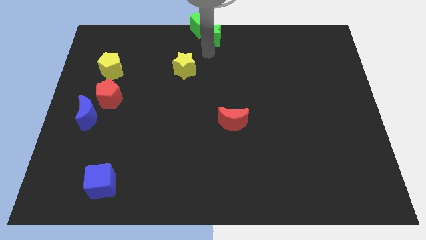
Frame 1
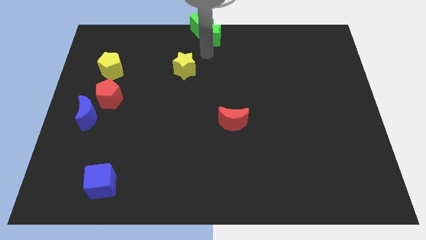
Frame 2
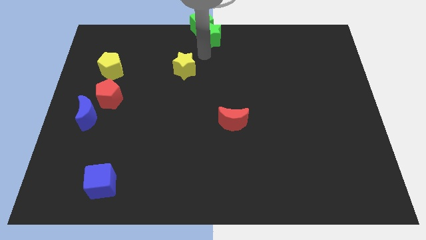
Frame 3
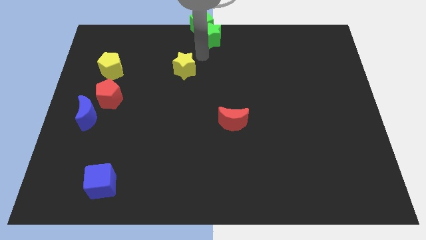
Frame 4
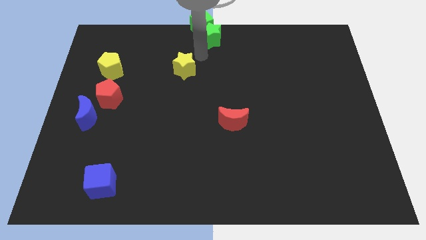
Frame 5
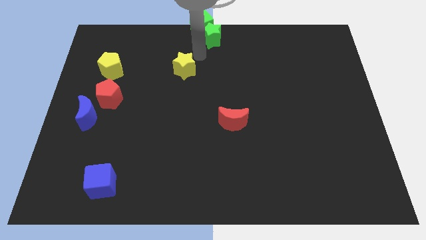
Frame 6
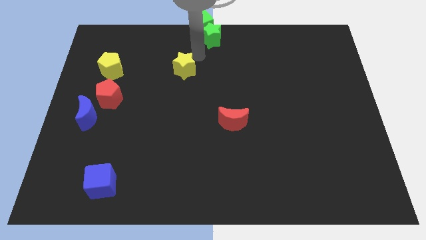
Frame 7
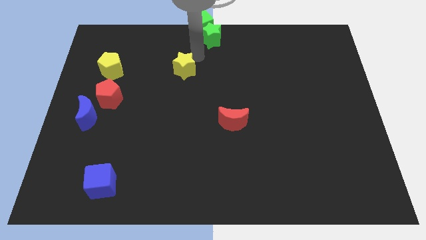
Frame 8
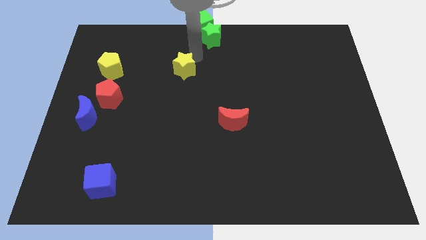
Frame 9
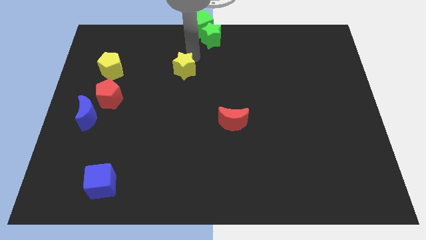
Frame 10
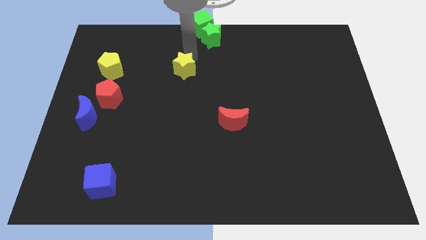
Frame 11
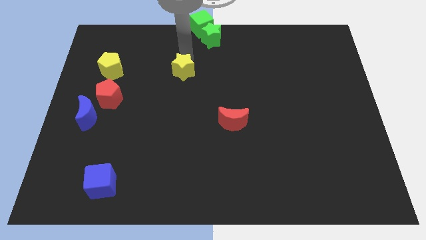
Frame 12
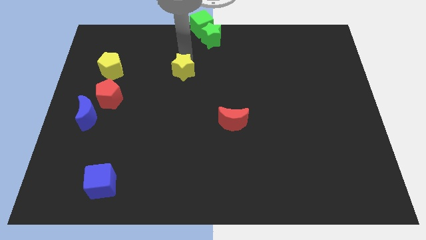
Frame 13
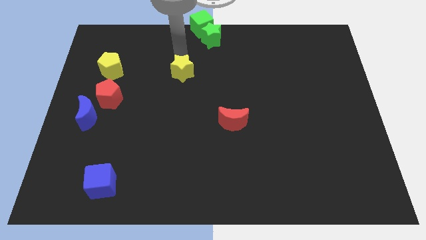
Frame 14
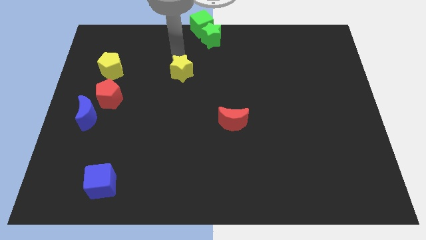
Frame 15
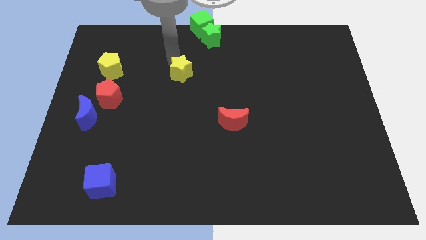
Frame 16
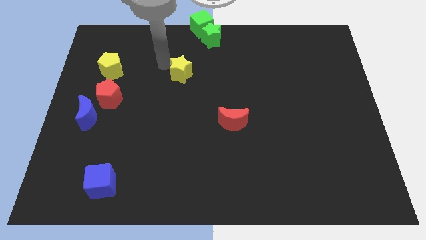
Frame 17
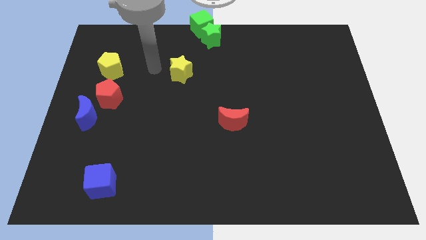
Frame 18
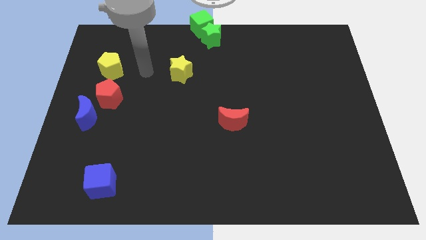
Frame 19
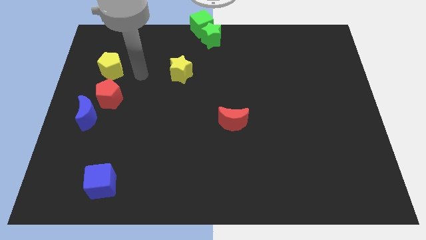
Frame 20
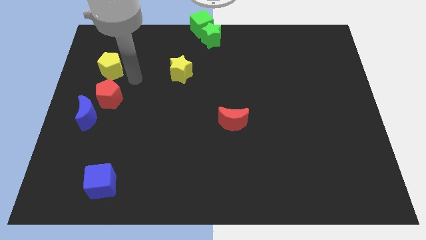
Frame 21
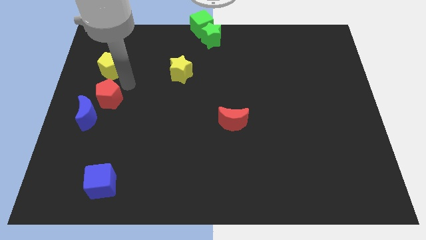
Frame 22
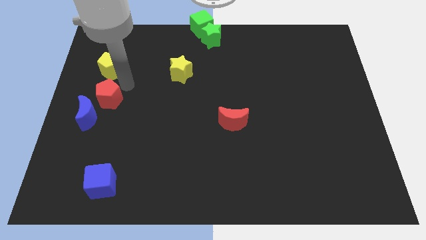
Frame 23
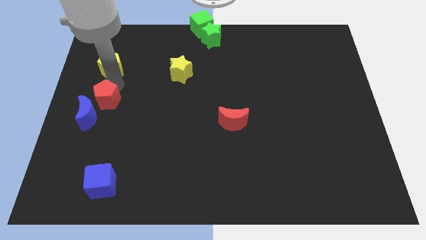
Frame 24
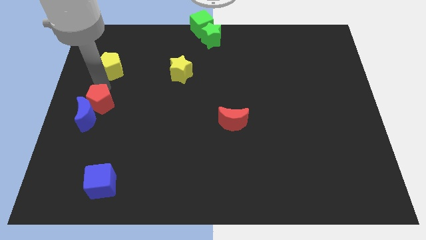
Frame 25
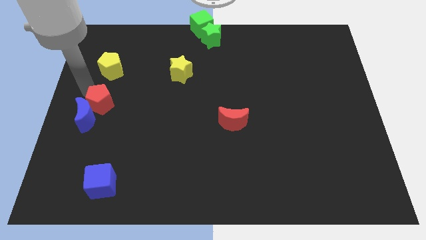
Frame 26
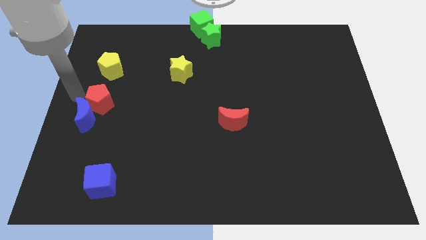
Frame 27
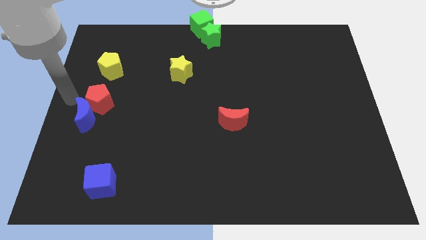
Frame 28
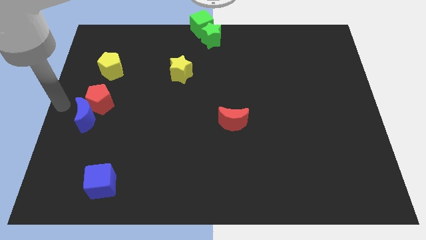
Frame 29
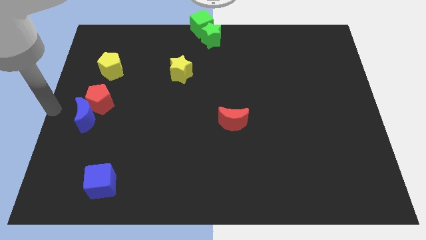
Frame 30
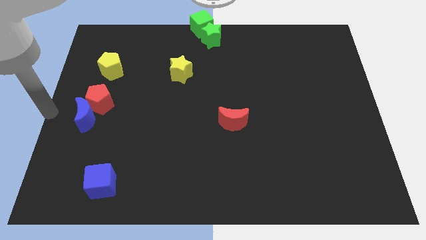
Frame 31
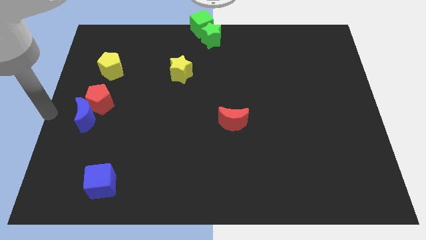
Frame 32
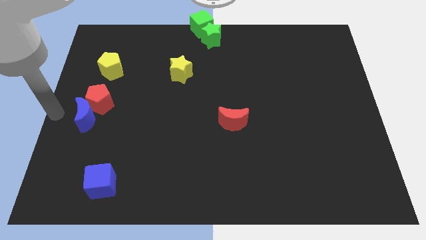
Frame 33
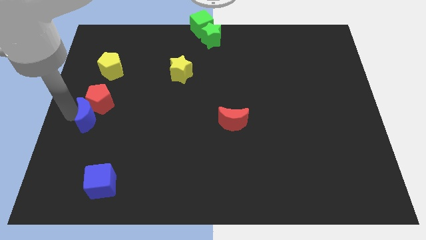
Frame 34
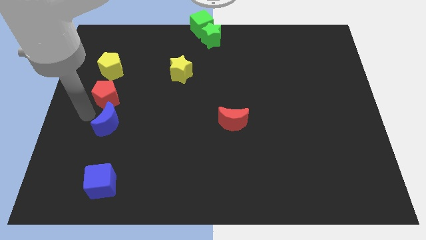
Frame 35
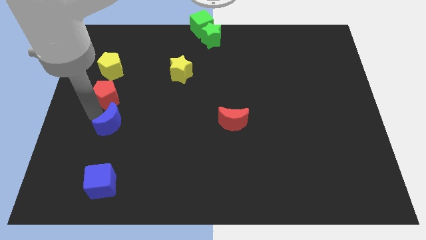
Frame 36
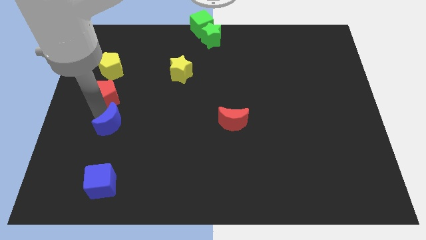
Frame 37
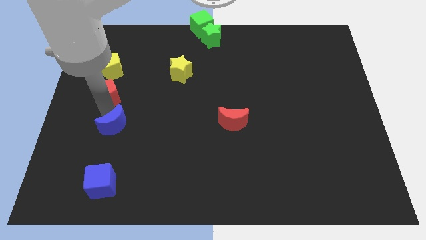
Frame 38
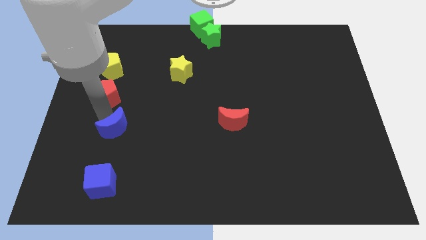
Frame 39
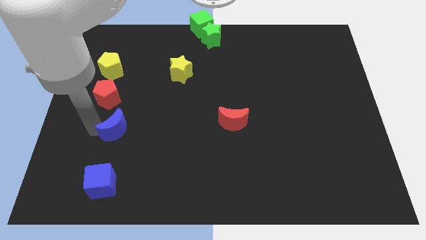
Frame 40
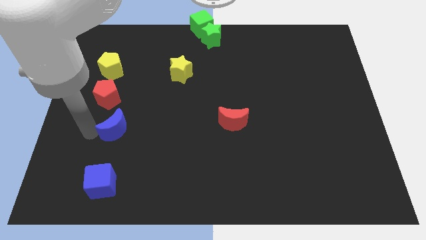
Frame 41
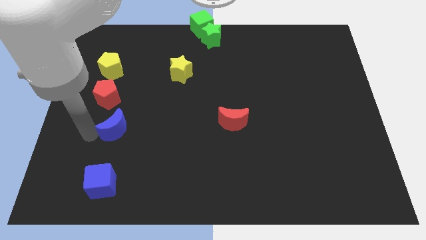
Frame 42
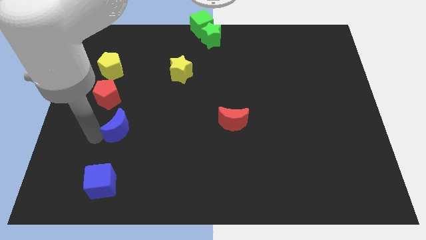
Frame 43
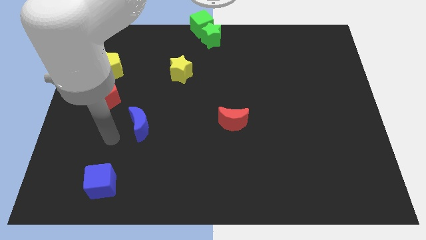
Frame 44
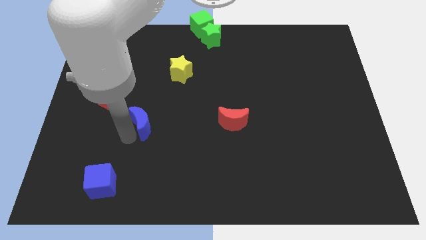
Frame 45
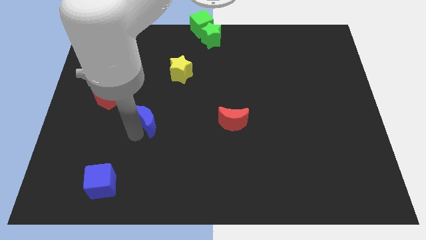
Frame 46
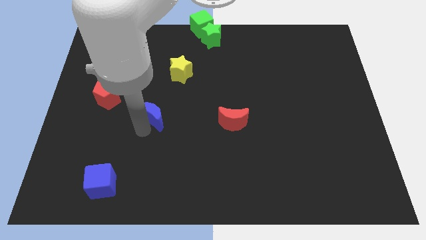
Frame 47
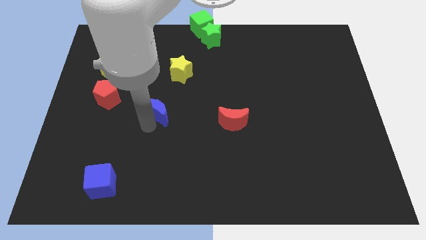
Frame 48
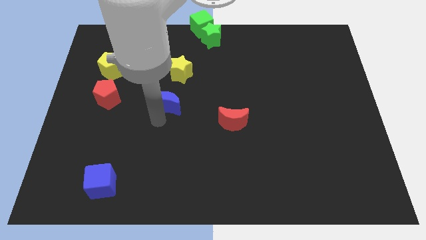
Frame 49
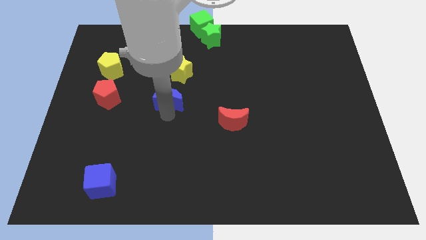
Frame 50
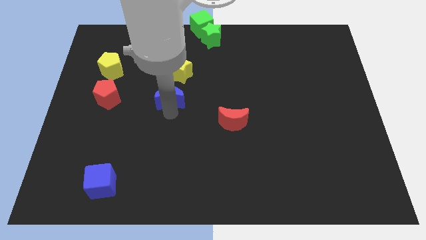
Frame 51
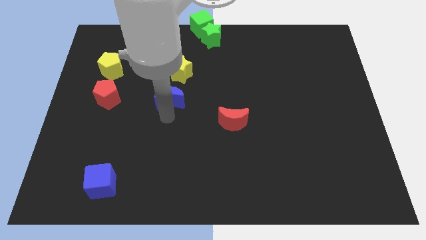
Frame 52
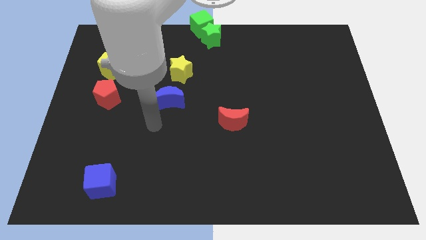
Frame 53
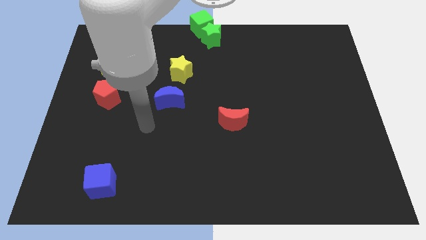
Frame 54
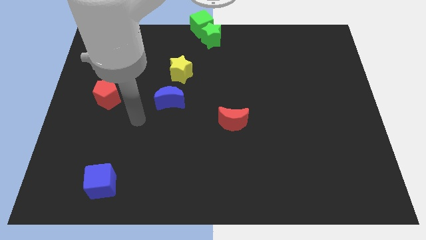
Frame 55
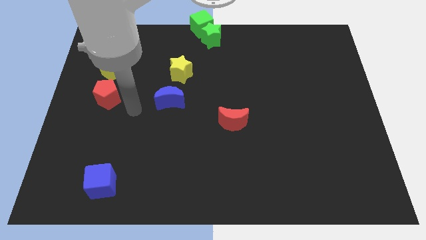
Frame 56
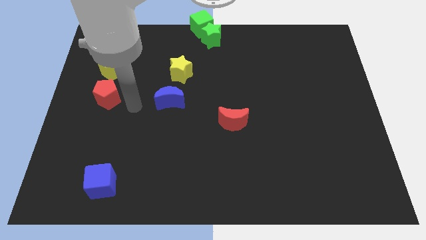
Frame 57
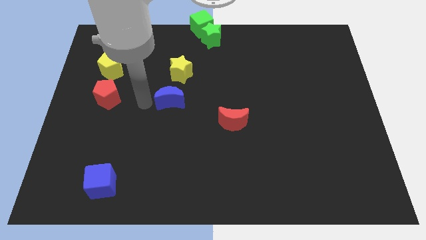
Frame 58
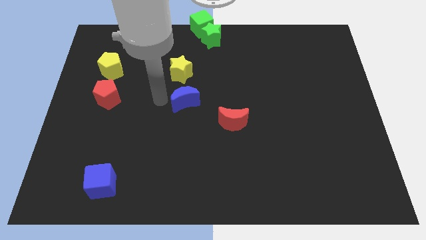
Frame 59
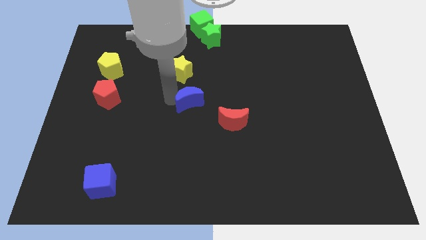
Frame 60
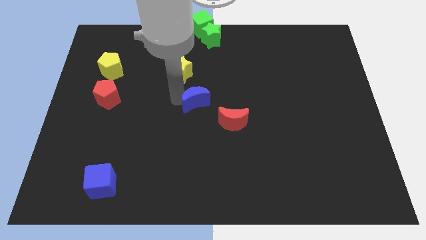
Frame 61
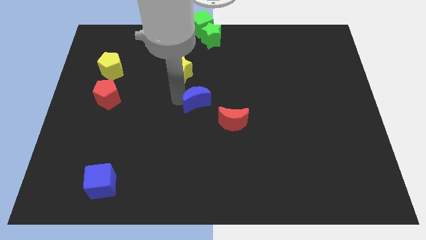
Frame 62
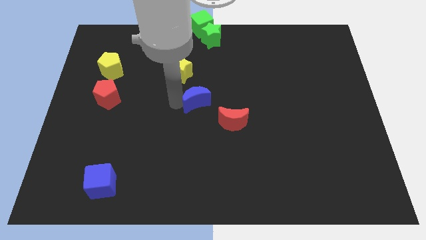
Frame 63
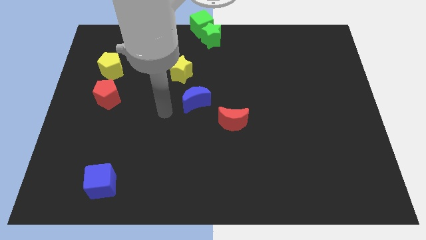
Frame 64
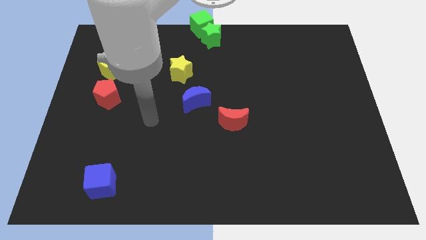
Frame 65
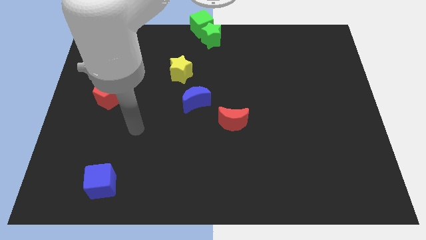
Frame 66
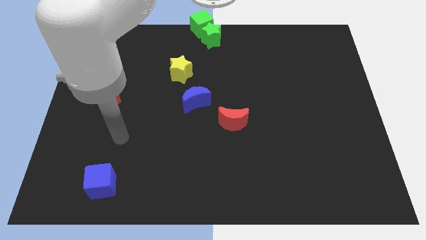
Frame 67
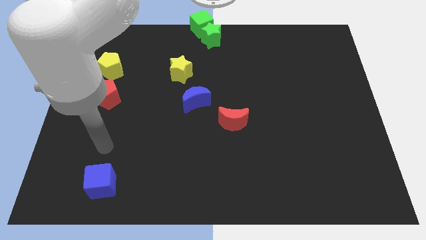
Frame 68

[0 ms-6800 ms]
drag the blue crescent to the center of the board

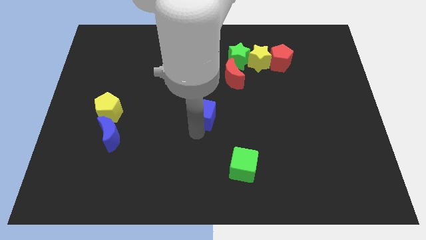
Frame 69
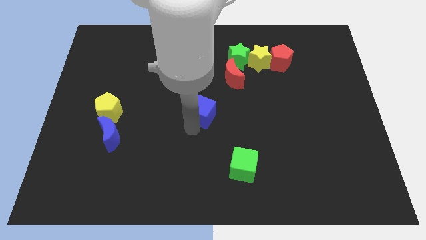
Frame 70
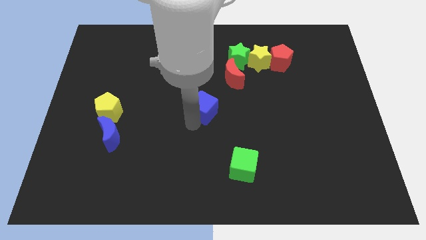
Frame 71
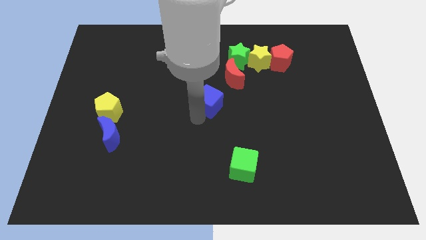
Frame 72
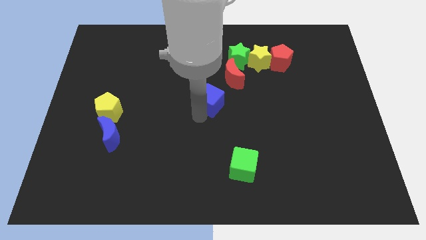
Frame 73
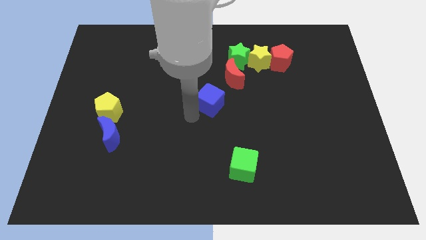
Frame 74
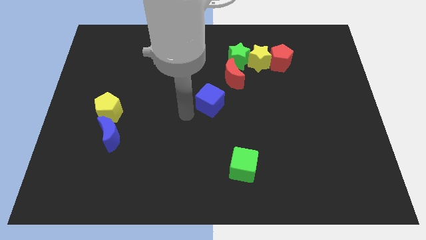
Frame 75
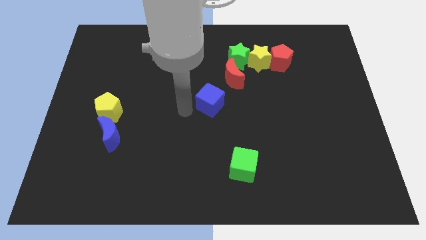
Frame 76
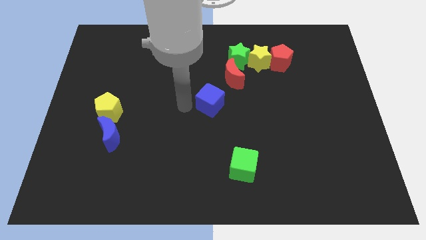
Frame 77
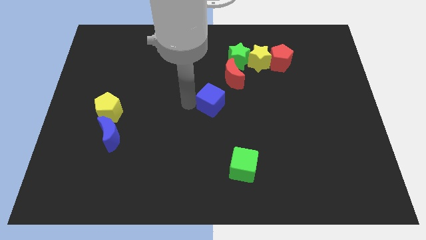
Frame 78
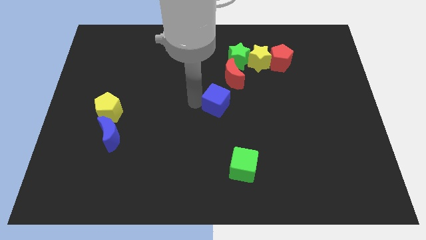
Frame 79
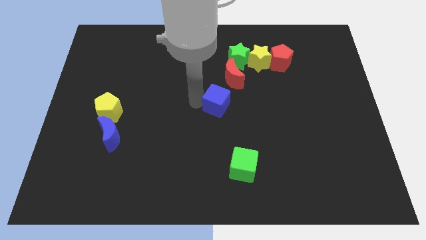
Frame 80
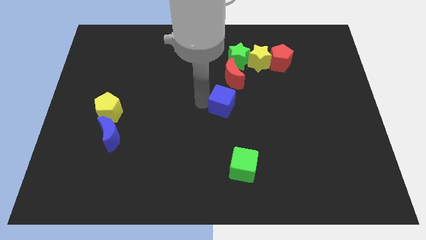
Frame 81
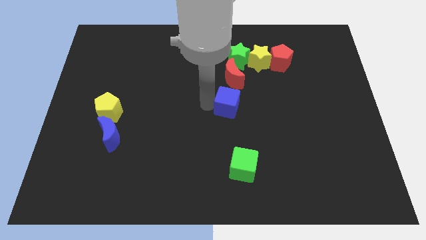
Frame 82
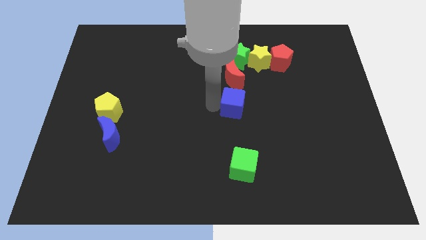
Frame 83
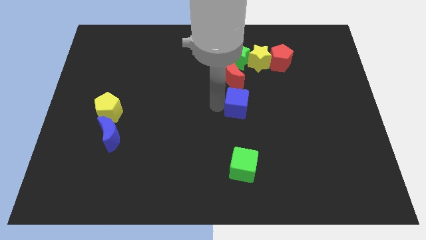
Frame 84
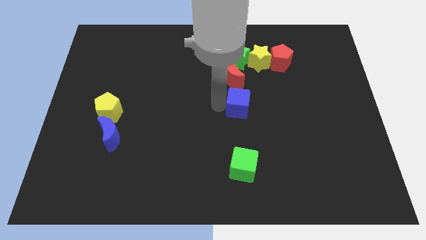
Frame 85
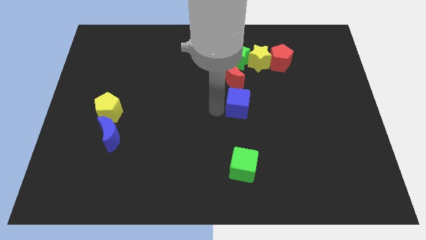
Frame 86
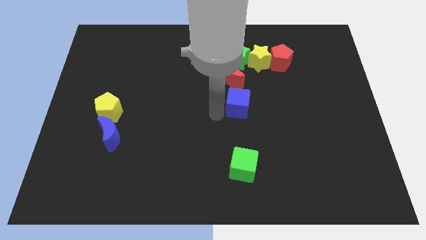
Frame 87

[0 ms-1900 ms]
move blue cube to the bottom of red crescent

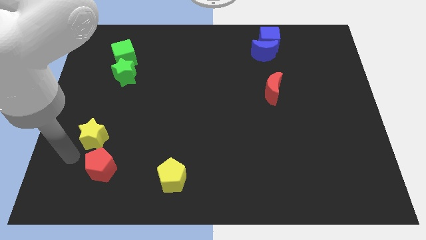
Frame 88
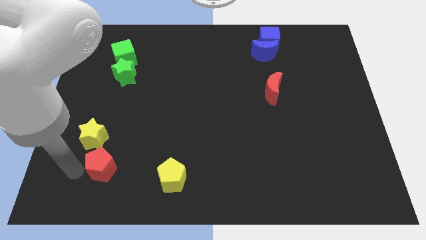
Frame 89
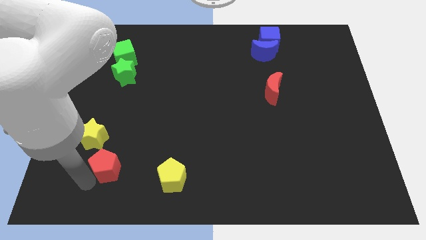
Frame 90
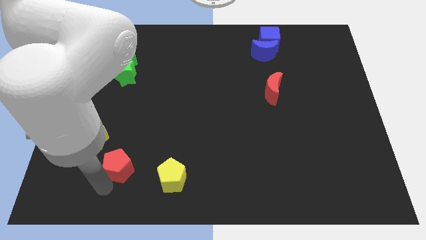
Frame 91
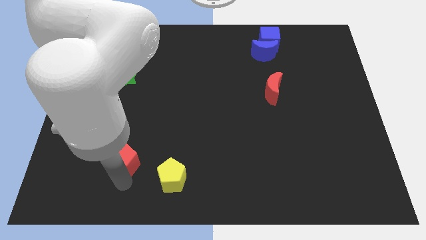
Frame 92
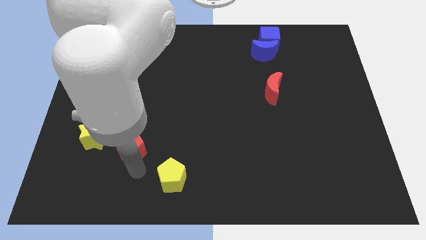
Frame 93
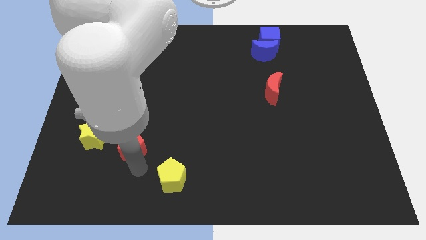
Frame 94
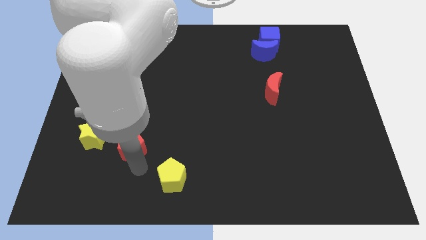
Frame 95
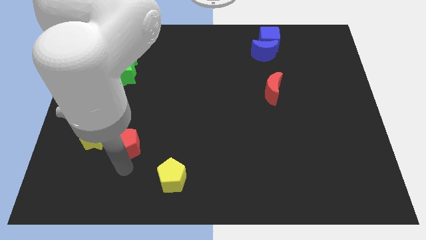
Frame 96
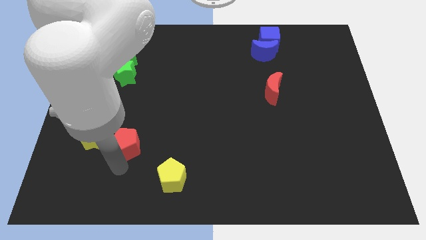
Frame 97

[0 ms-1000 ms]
place the red pentagon to the right of the yellow star
